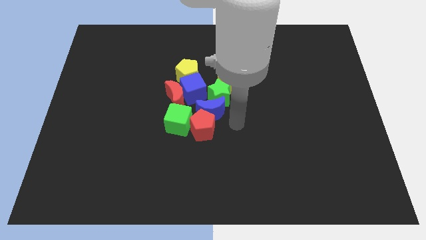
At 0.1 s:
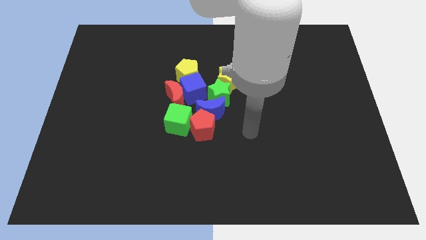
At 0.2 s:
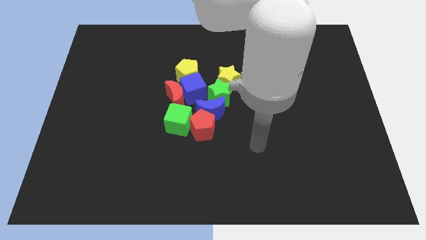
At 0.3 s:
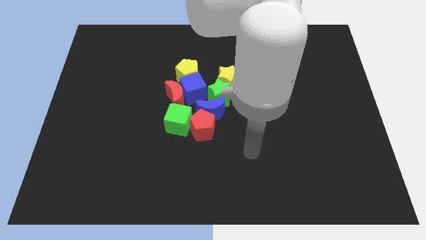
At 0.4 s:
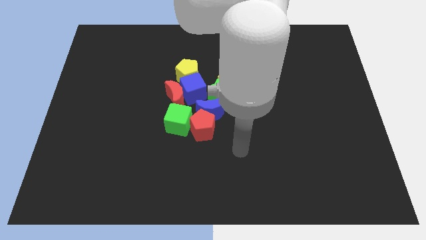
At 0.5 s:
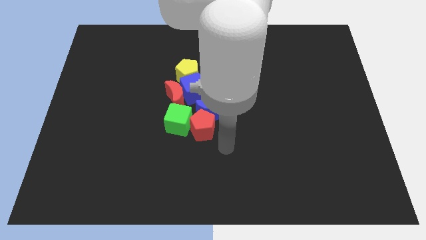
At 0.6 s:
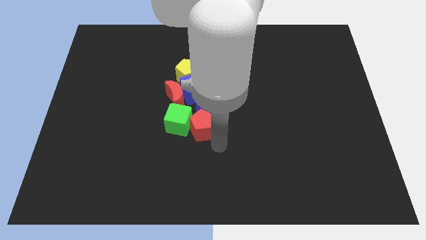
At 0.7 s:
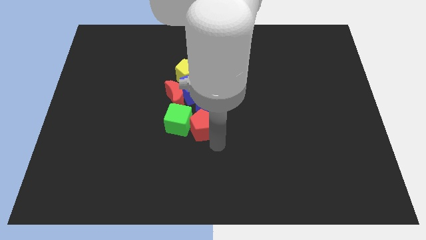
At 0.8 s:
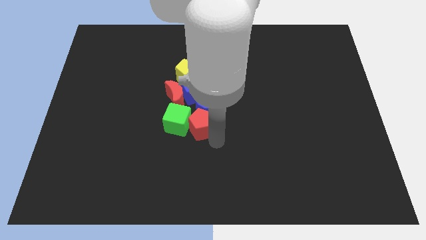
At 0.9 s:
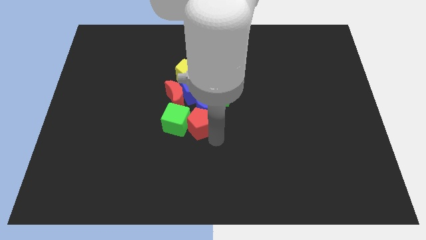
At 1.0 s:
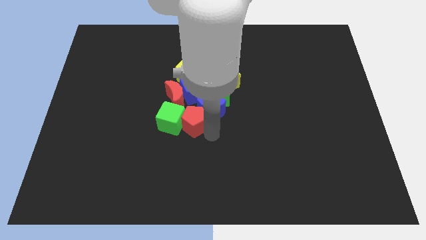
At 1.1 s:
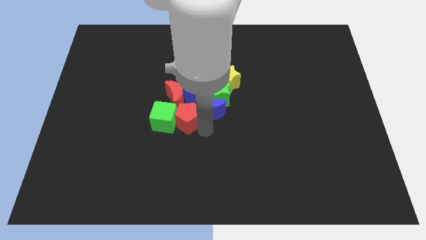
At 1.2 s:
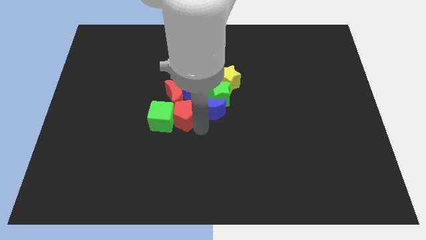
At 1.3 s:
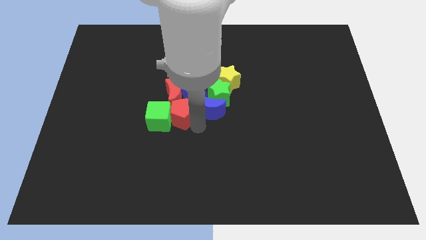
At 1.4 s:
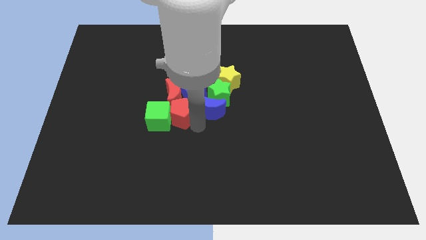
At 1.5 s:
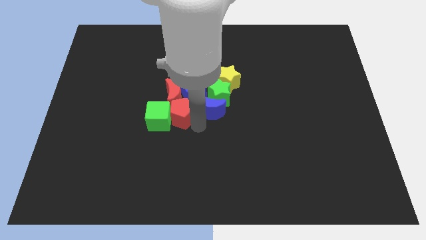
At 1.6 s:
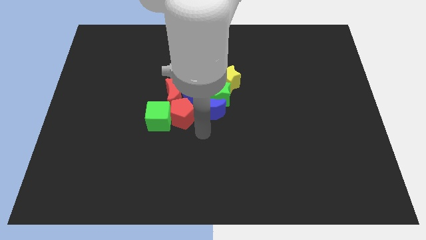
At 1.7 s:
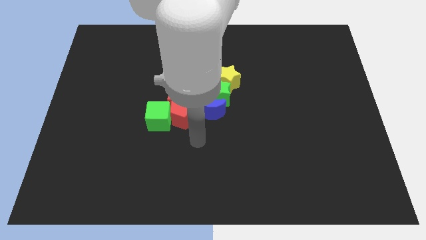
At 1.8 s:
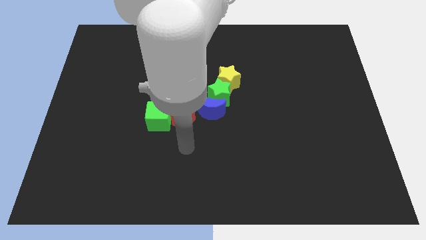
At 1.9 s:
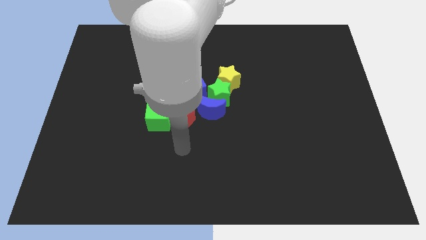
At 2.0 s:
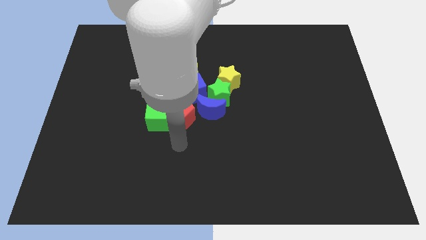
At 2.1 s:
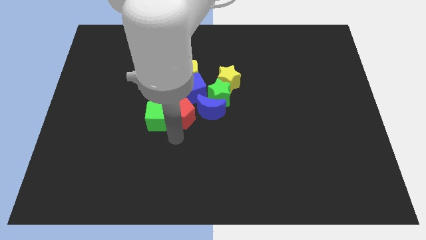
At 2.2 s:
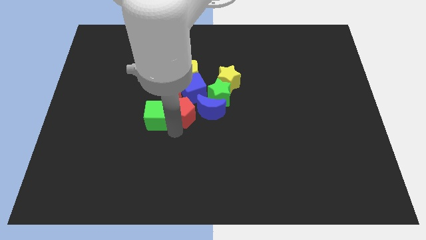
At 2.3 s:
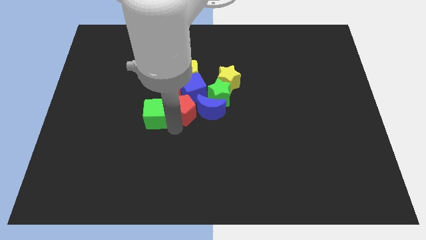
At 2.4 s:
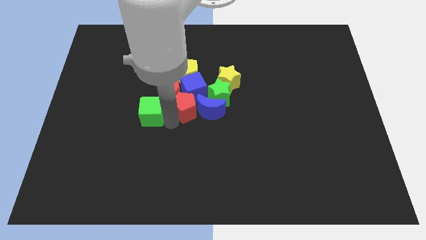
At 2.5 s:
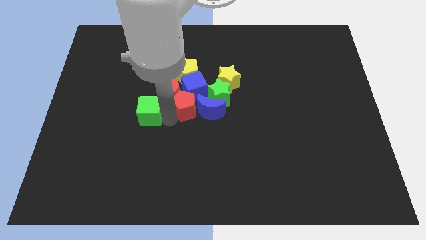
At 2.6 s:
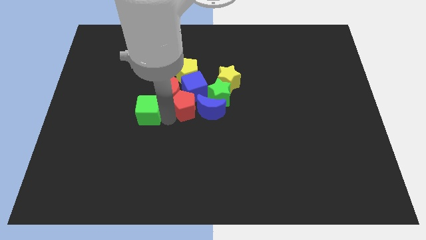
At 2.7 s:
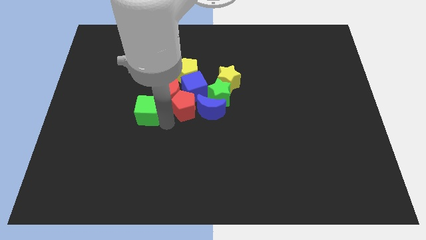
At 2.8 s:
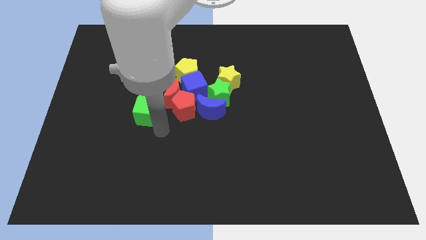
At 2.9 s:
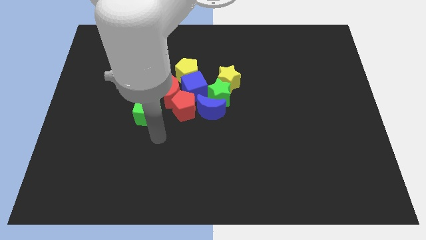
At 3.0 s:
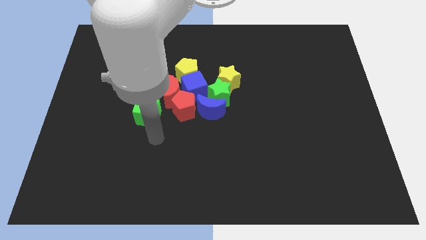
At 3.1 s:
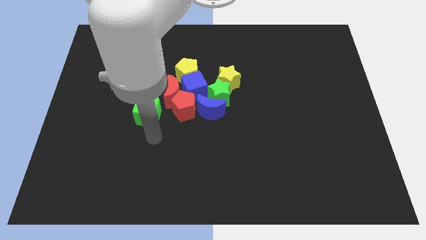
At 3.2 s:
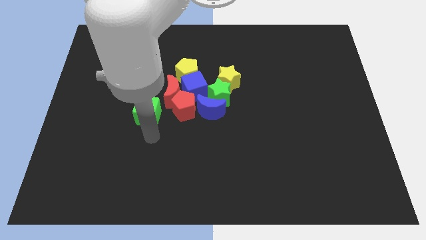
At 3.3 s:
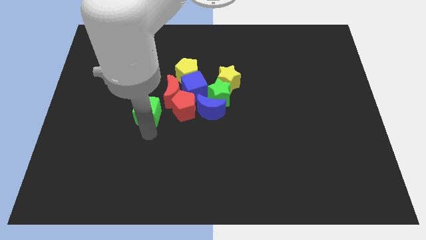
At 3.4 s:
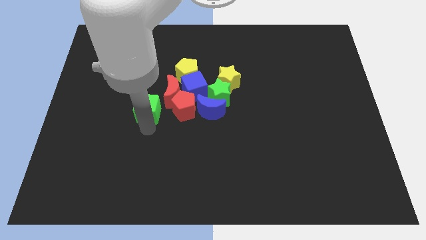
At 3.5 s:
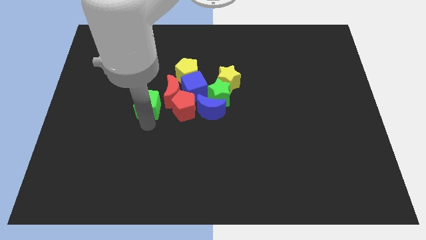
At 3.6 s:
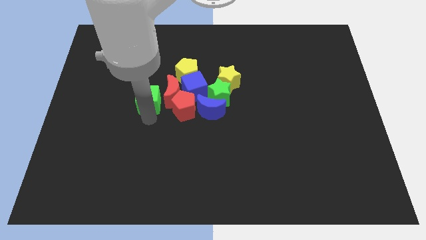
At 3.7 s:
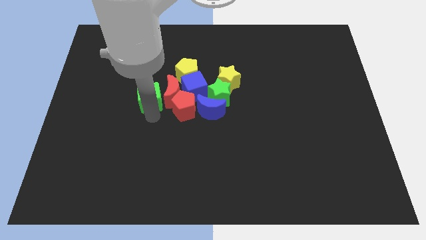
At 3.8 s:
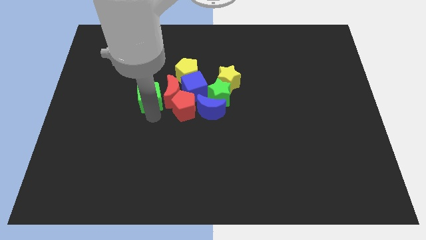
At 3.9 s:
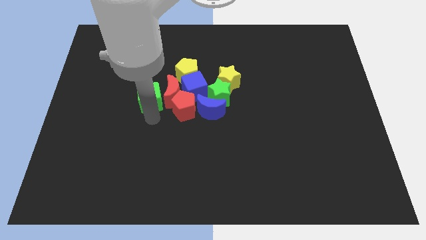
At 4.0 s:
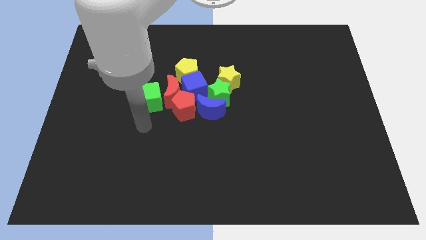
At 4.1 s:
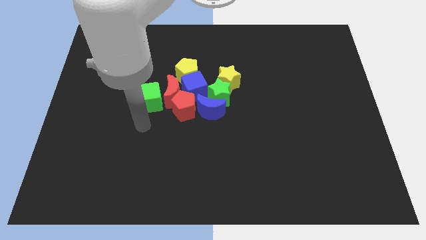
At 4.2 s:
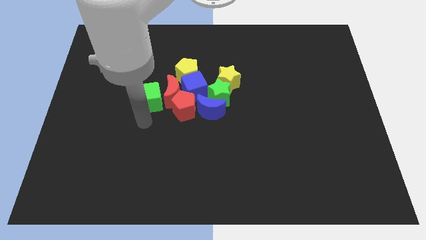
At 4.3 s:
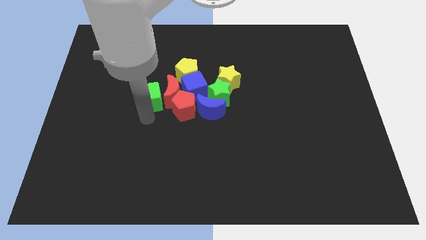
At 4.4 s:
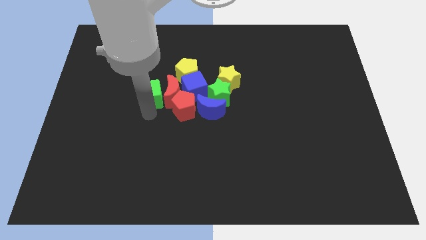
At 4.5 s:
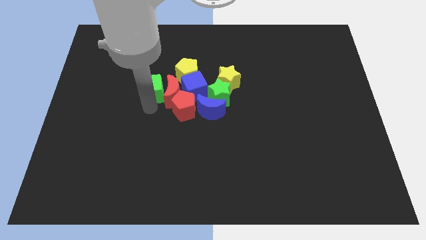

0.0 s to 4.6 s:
adjust the blocks at the center of the board

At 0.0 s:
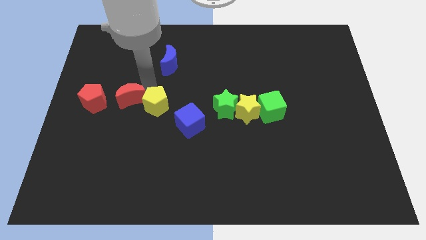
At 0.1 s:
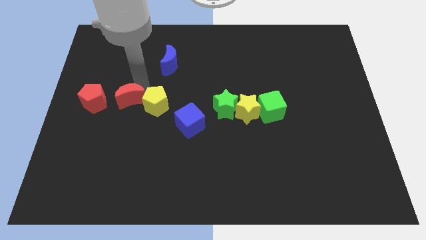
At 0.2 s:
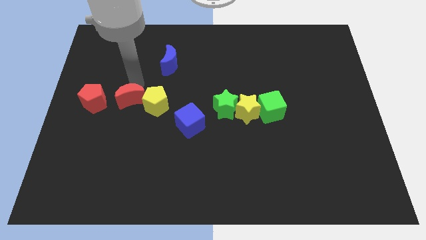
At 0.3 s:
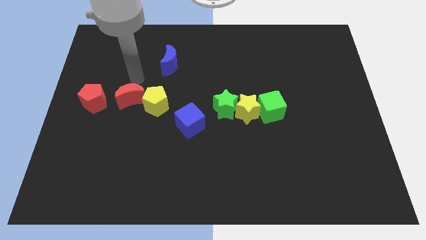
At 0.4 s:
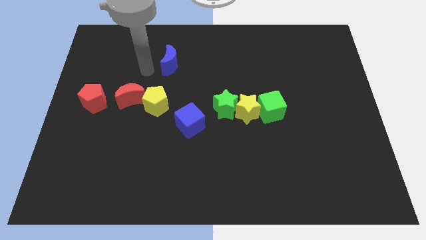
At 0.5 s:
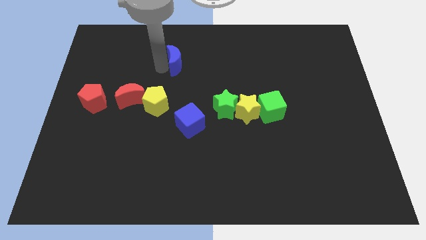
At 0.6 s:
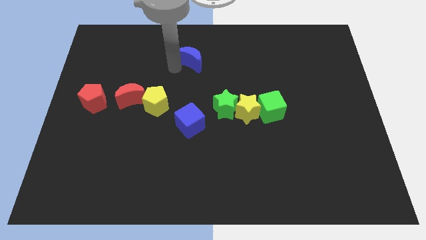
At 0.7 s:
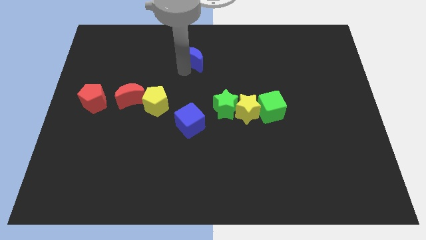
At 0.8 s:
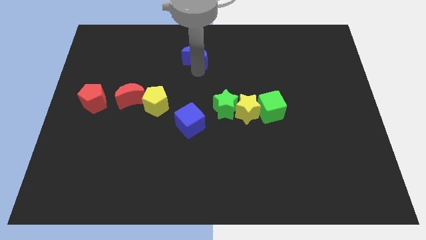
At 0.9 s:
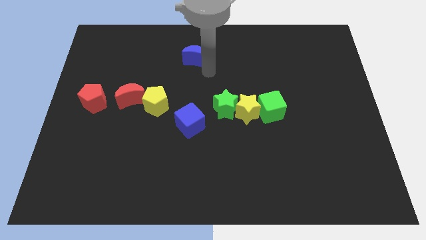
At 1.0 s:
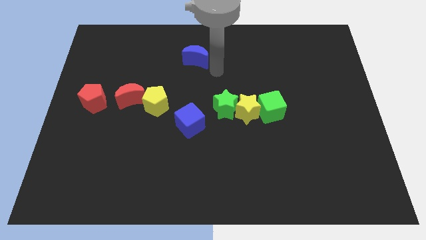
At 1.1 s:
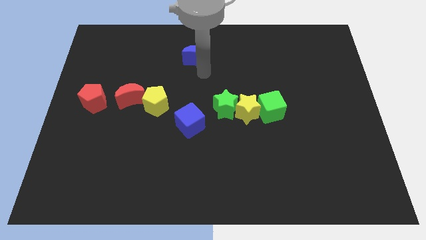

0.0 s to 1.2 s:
place blue moon vertical to blue cube

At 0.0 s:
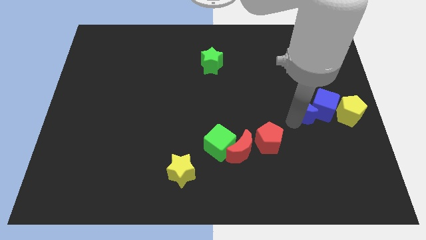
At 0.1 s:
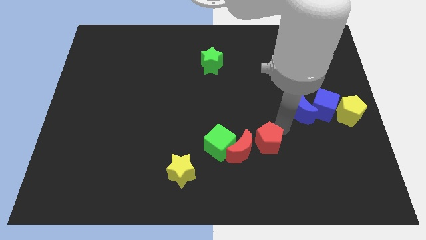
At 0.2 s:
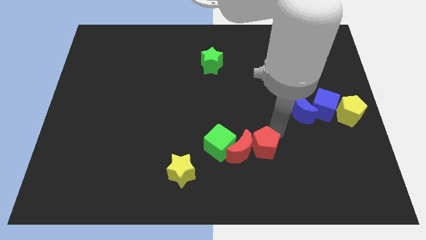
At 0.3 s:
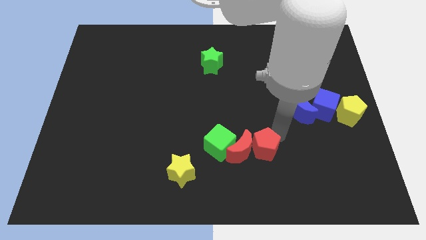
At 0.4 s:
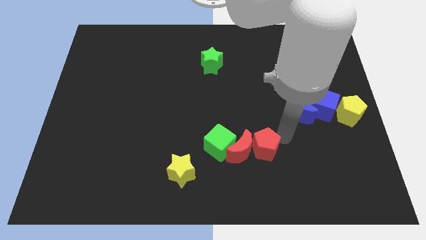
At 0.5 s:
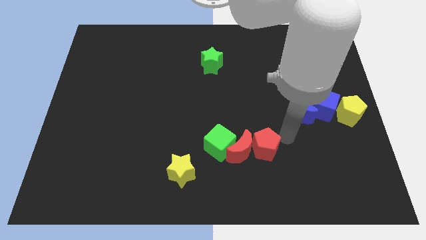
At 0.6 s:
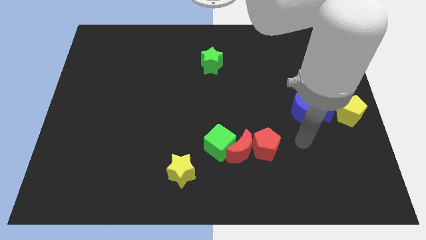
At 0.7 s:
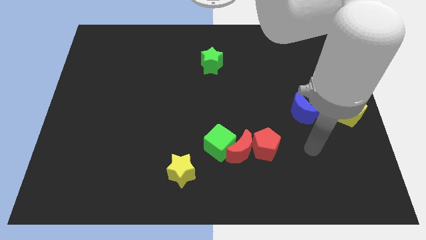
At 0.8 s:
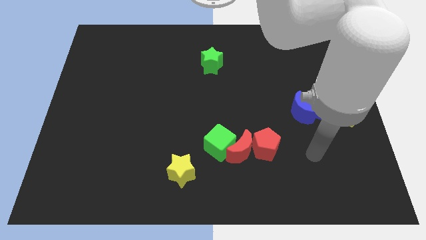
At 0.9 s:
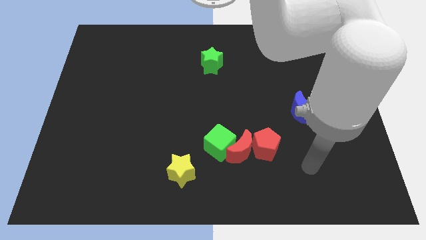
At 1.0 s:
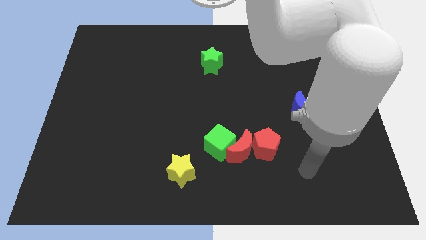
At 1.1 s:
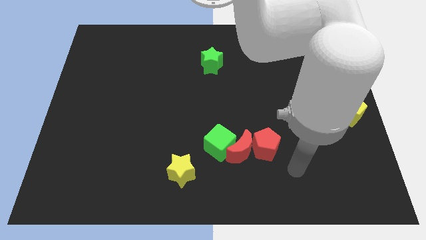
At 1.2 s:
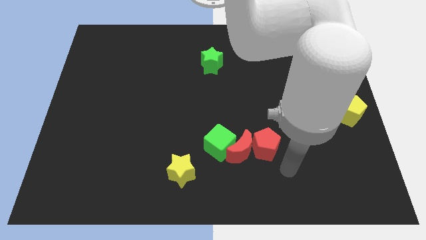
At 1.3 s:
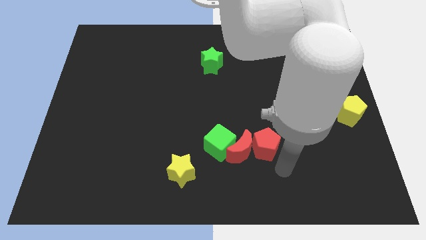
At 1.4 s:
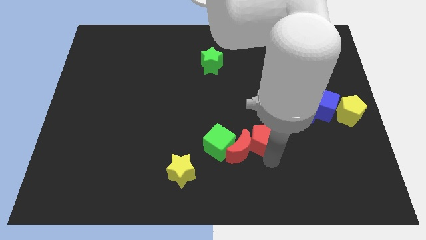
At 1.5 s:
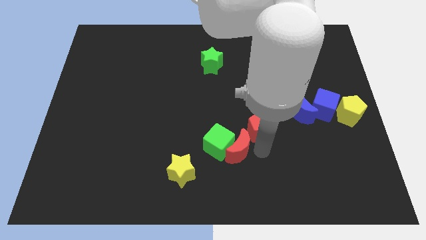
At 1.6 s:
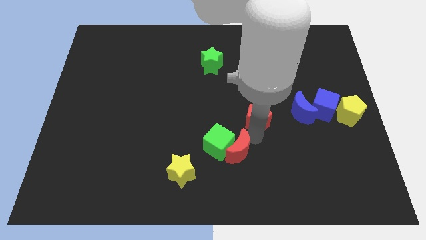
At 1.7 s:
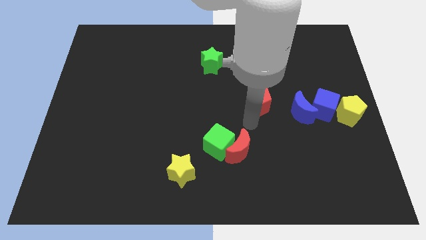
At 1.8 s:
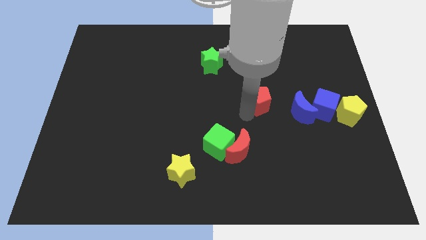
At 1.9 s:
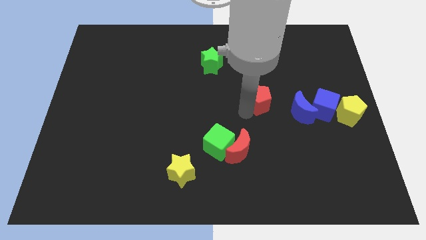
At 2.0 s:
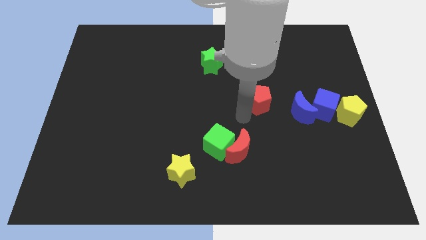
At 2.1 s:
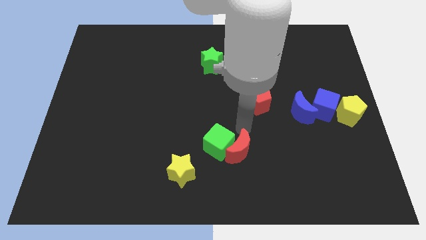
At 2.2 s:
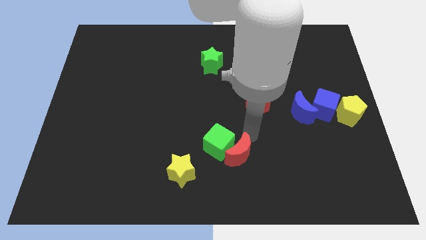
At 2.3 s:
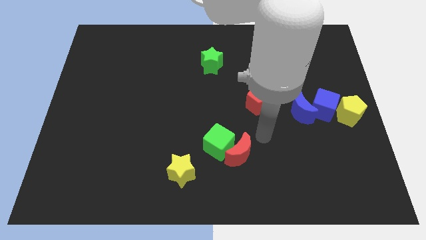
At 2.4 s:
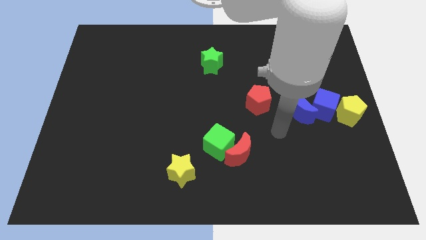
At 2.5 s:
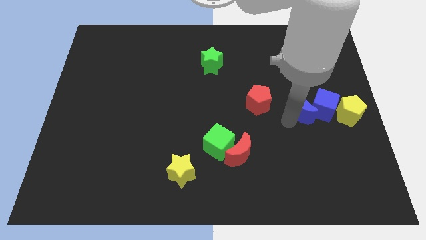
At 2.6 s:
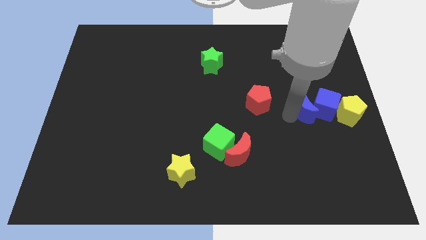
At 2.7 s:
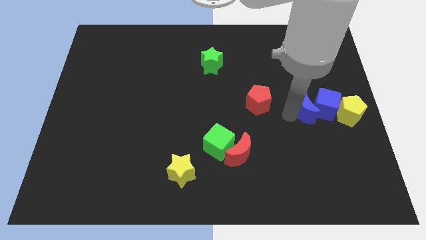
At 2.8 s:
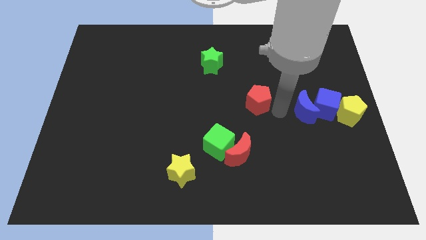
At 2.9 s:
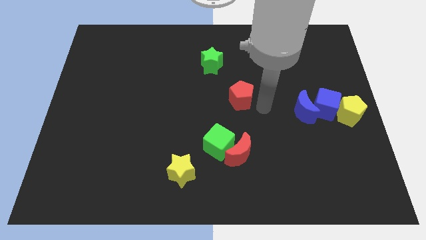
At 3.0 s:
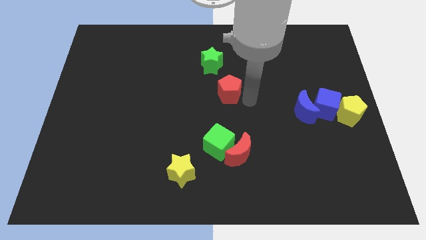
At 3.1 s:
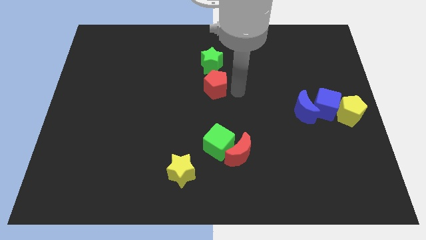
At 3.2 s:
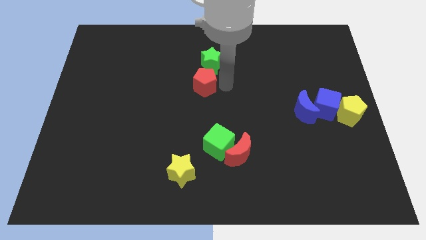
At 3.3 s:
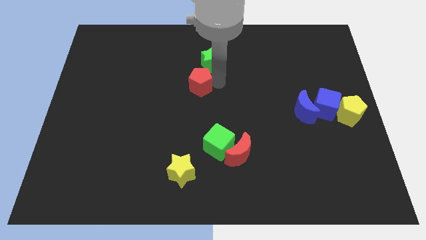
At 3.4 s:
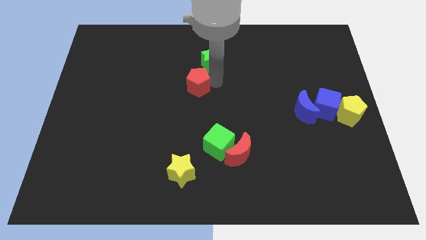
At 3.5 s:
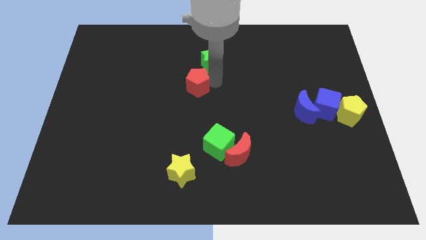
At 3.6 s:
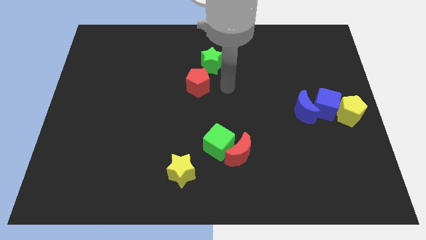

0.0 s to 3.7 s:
place the red pentagon at the bottom left side of green star
